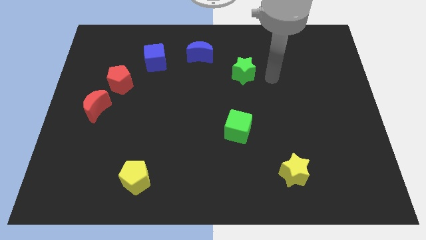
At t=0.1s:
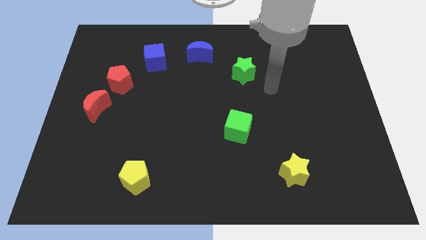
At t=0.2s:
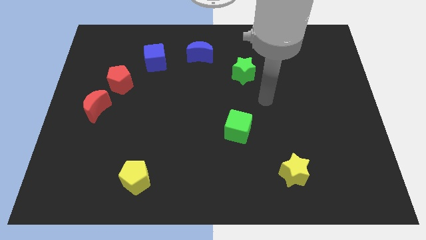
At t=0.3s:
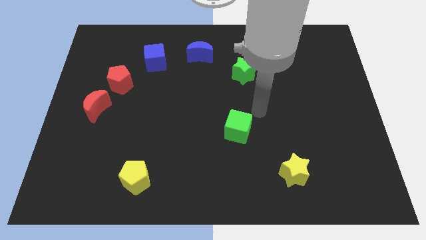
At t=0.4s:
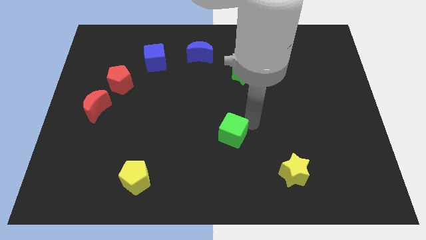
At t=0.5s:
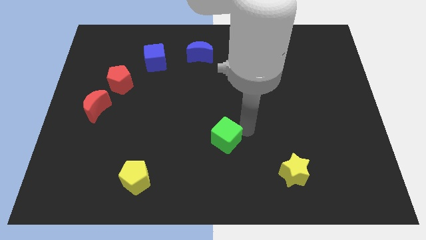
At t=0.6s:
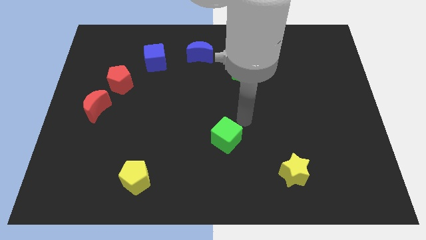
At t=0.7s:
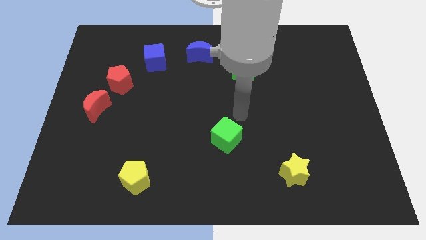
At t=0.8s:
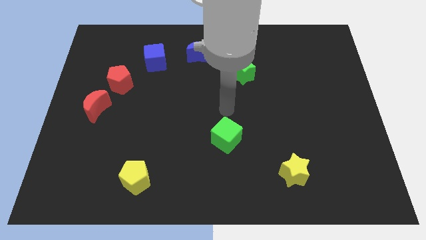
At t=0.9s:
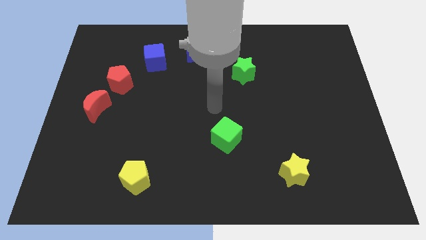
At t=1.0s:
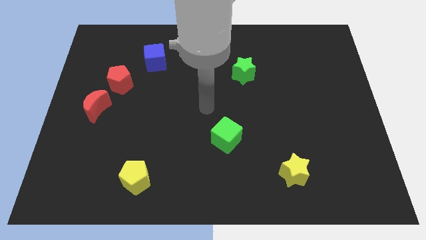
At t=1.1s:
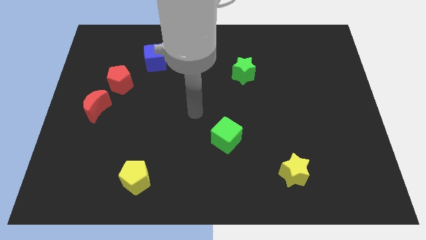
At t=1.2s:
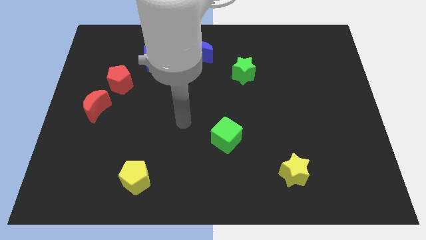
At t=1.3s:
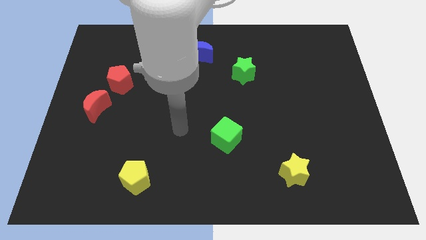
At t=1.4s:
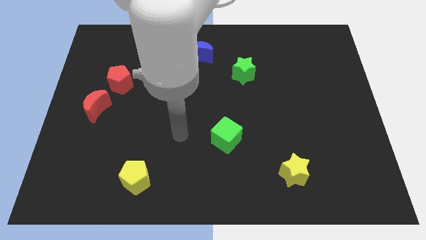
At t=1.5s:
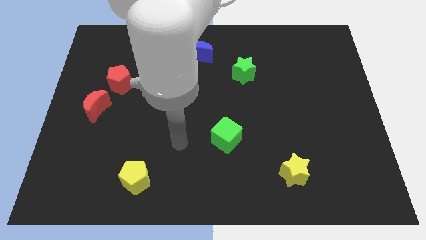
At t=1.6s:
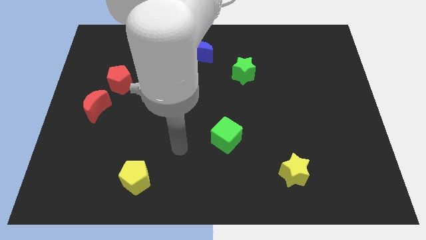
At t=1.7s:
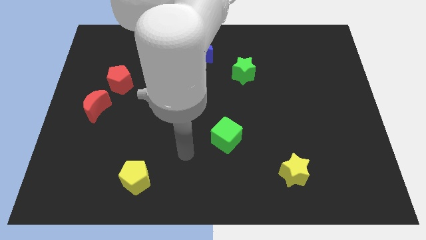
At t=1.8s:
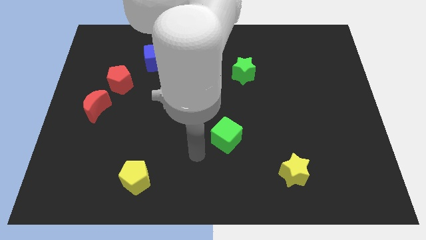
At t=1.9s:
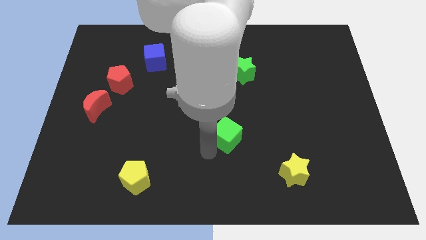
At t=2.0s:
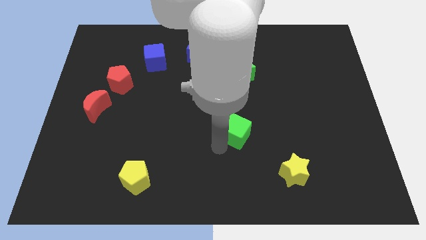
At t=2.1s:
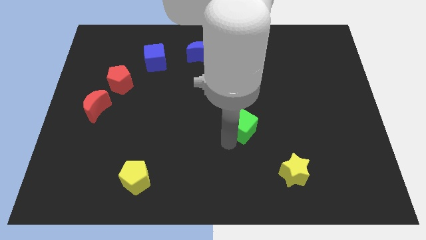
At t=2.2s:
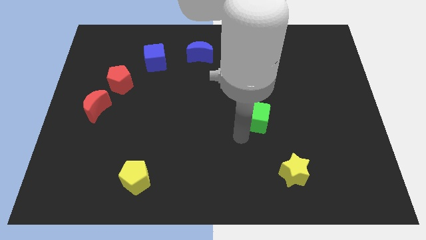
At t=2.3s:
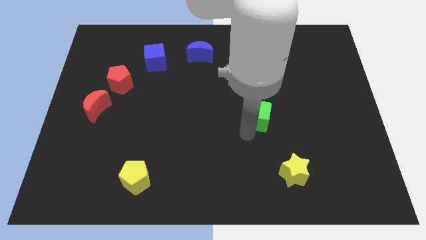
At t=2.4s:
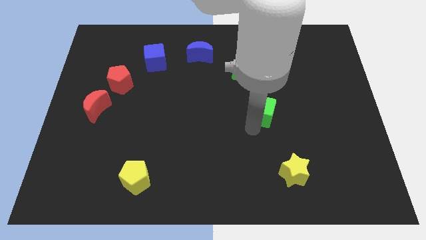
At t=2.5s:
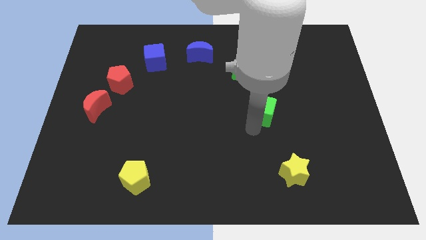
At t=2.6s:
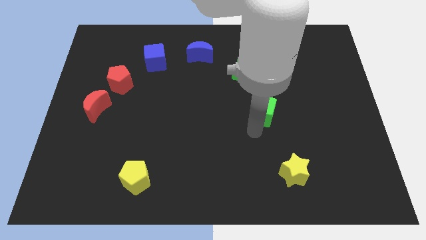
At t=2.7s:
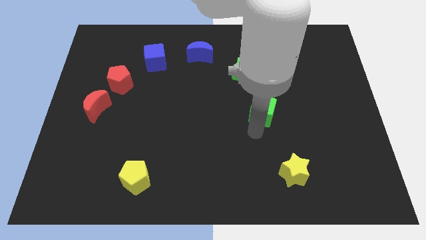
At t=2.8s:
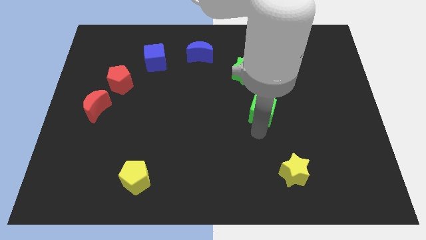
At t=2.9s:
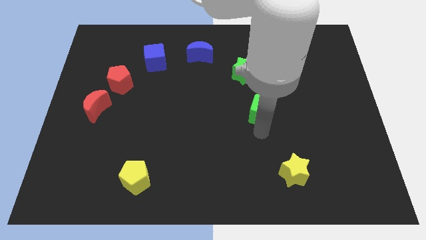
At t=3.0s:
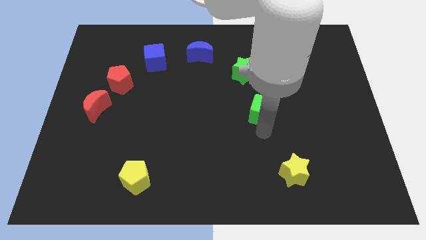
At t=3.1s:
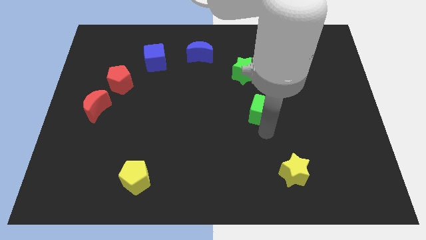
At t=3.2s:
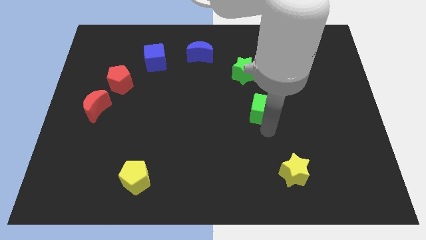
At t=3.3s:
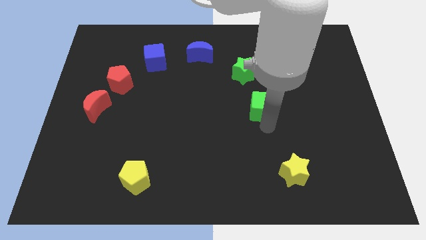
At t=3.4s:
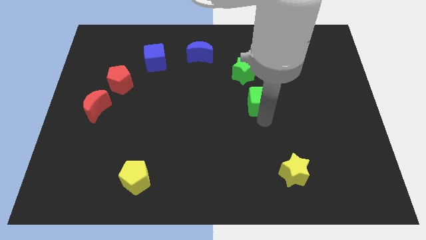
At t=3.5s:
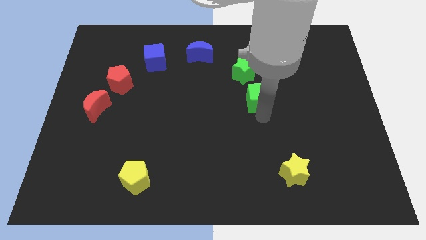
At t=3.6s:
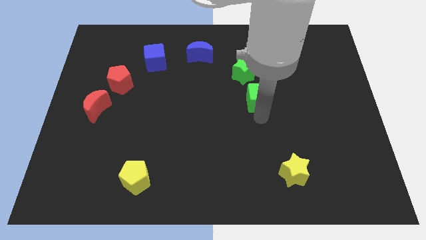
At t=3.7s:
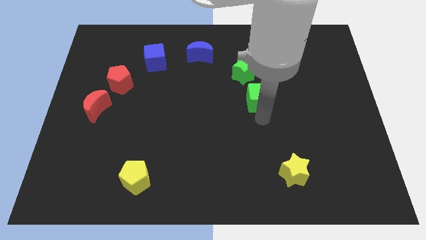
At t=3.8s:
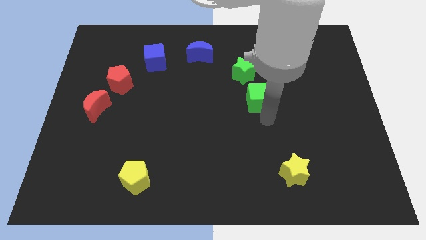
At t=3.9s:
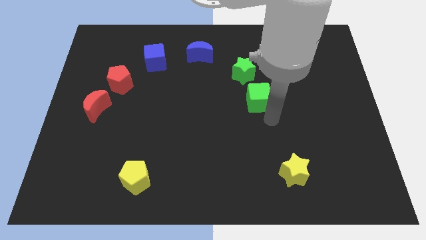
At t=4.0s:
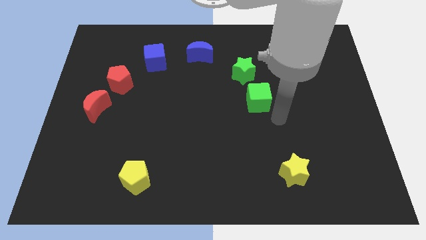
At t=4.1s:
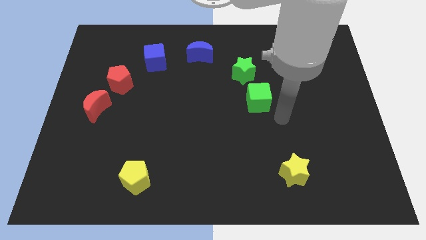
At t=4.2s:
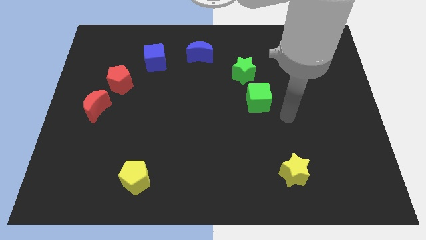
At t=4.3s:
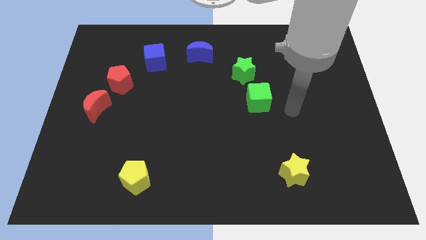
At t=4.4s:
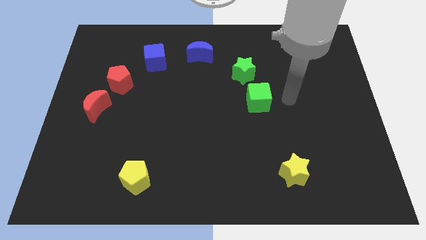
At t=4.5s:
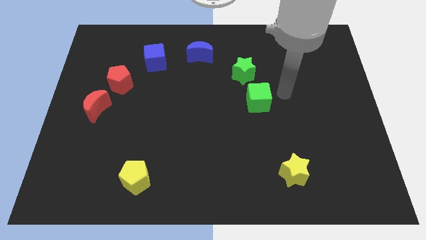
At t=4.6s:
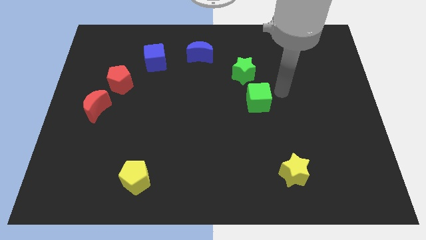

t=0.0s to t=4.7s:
place green block down to the green star

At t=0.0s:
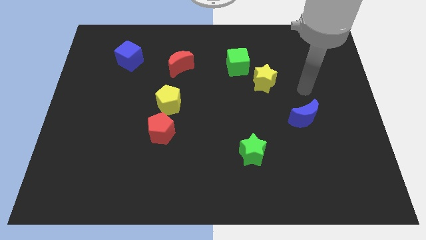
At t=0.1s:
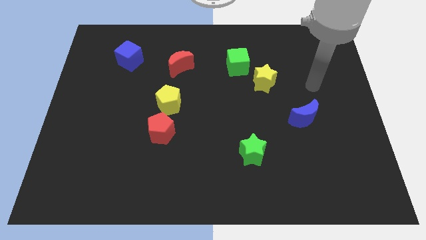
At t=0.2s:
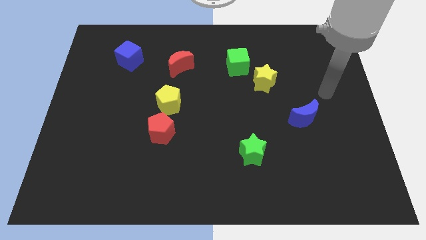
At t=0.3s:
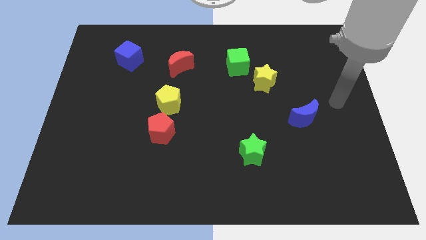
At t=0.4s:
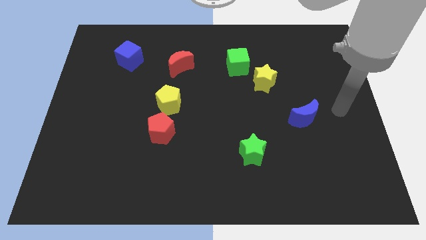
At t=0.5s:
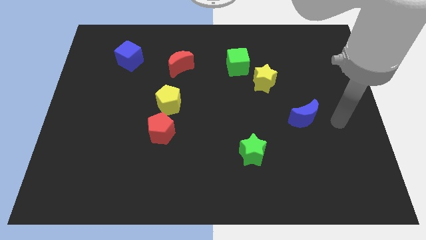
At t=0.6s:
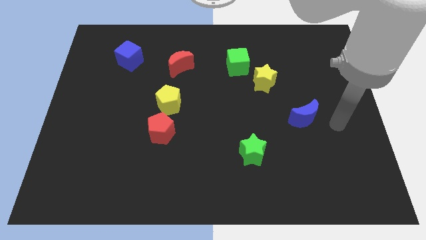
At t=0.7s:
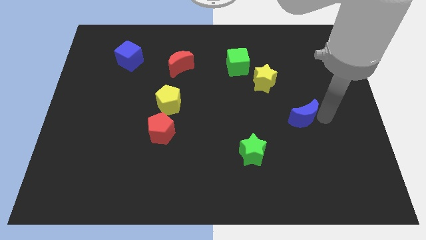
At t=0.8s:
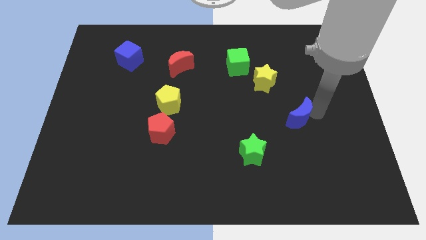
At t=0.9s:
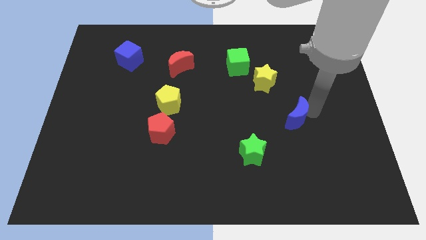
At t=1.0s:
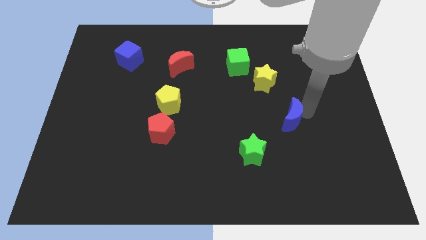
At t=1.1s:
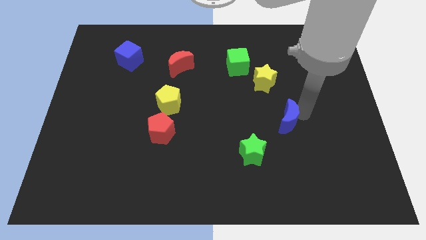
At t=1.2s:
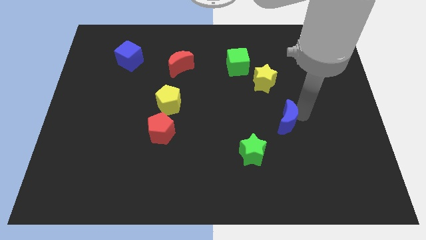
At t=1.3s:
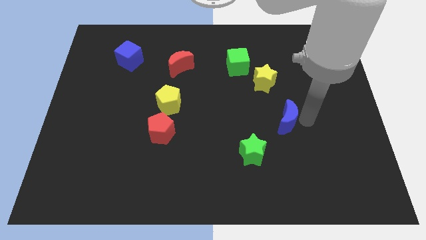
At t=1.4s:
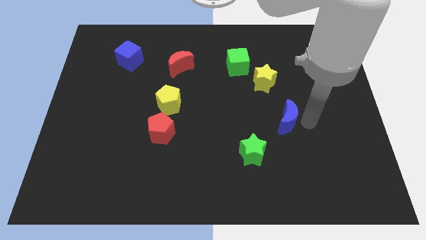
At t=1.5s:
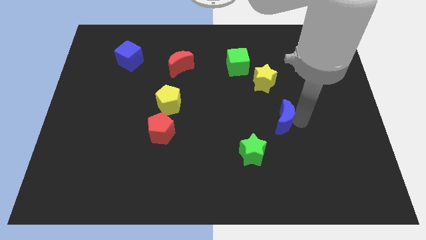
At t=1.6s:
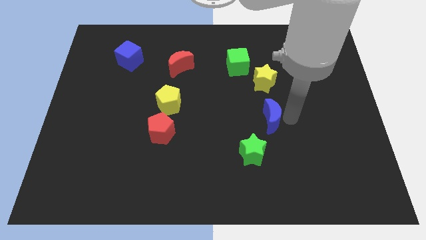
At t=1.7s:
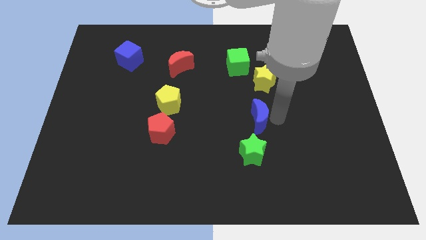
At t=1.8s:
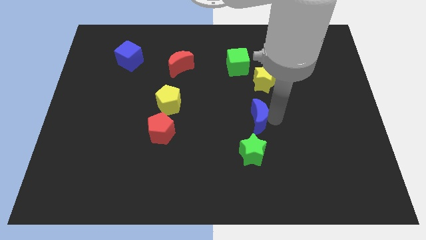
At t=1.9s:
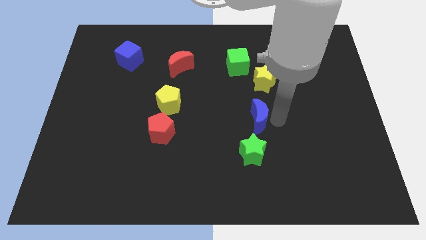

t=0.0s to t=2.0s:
place the blue crescent to the top of the green star

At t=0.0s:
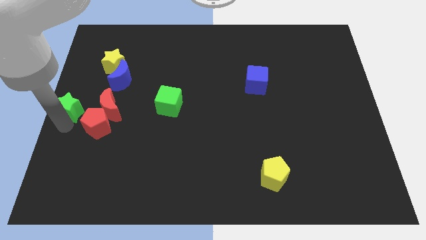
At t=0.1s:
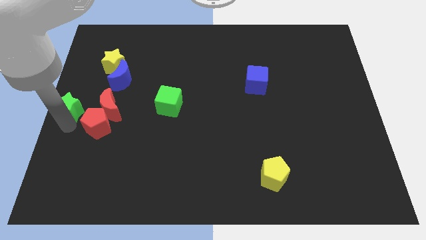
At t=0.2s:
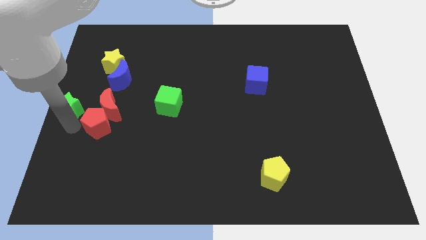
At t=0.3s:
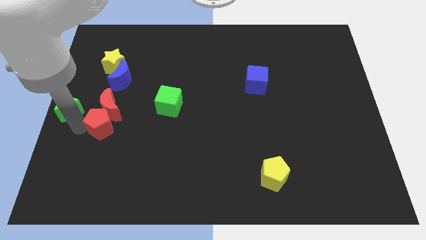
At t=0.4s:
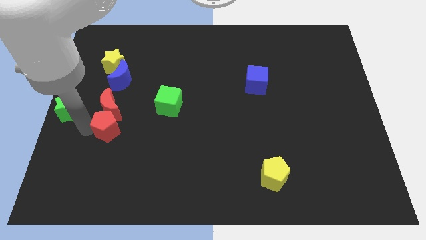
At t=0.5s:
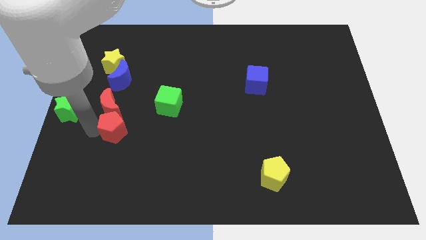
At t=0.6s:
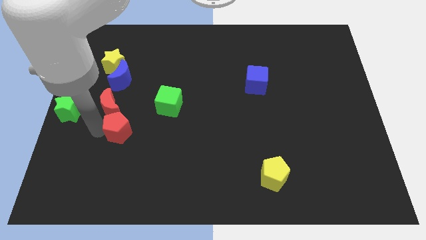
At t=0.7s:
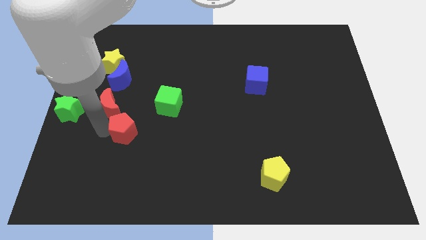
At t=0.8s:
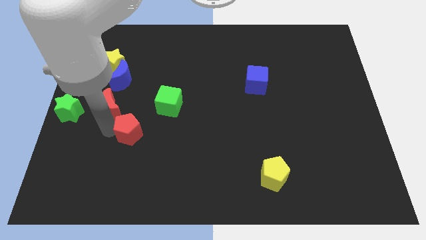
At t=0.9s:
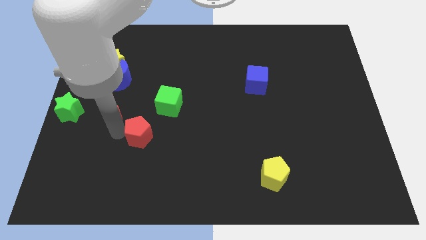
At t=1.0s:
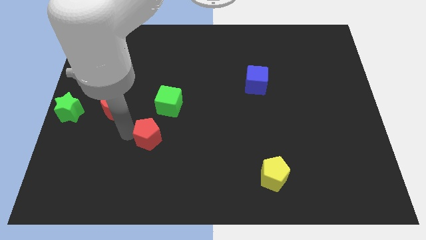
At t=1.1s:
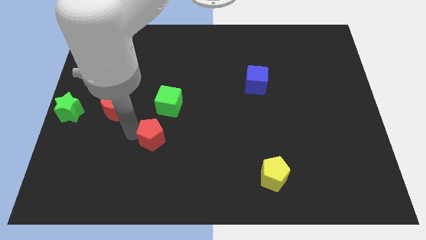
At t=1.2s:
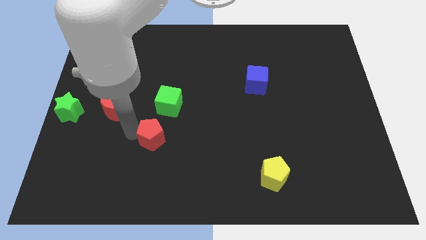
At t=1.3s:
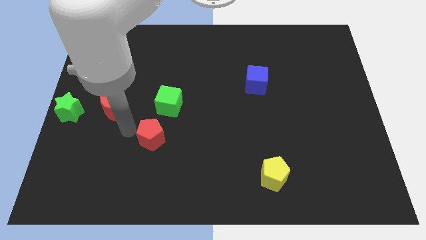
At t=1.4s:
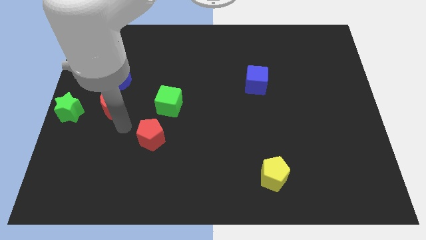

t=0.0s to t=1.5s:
move the red pentagon away from the red moon

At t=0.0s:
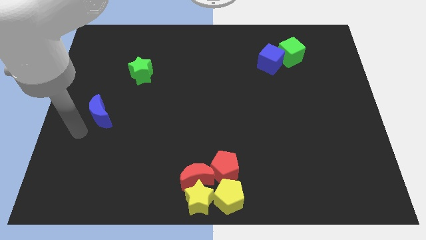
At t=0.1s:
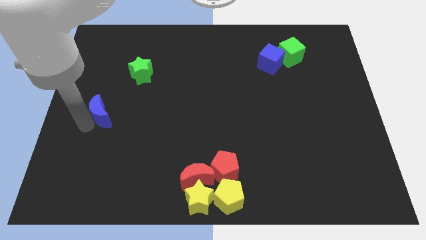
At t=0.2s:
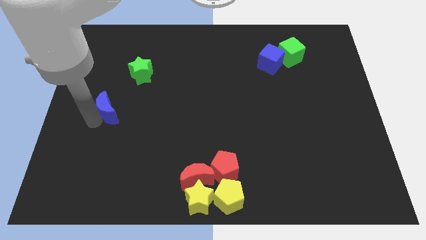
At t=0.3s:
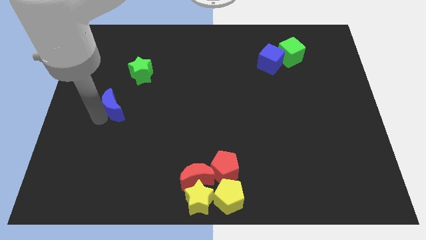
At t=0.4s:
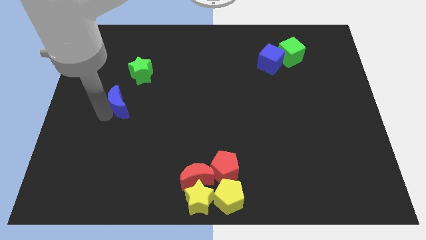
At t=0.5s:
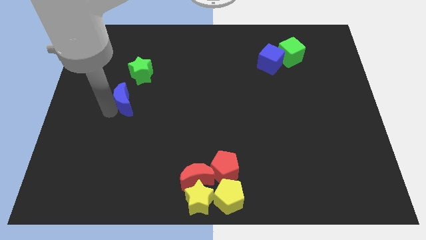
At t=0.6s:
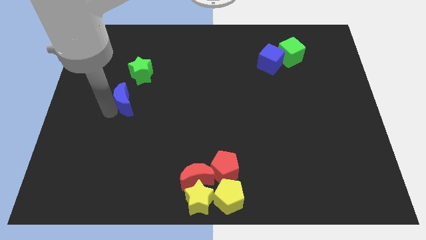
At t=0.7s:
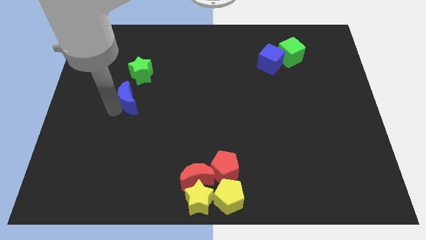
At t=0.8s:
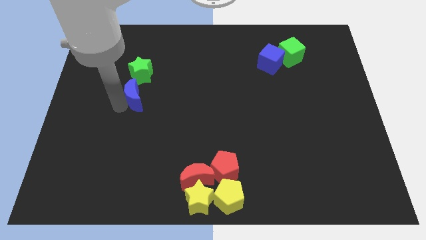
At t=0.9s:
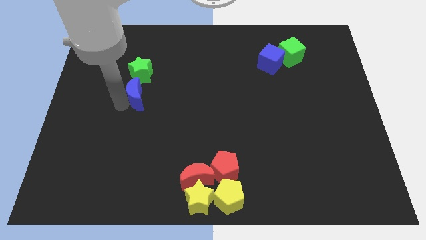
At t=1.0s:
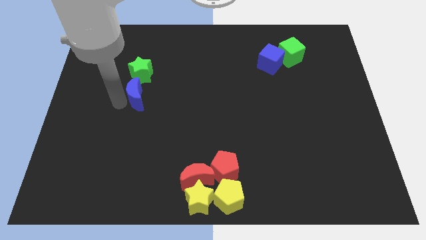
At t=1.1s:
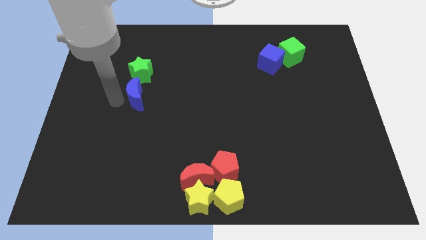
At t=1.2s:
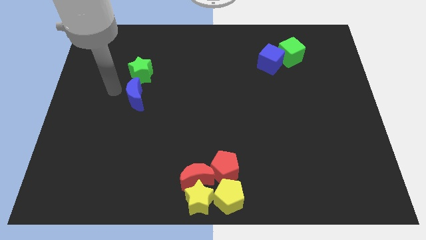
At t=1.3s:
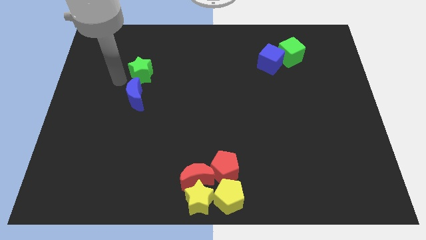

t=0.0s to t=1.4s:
put the blue crescent to the bottom side of the green star
